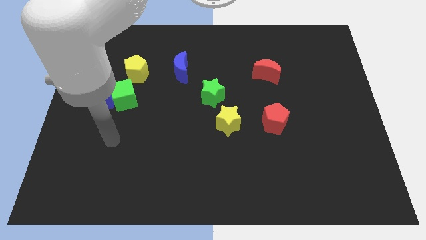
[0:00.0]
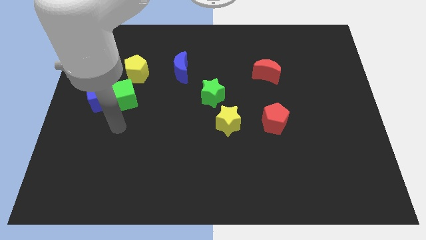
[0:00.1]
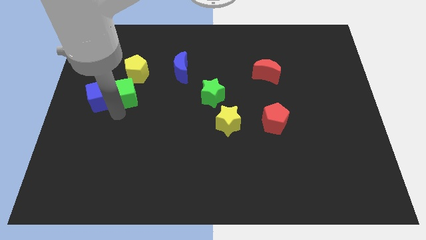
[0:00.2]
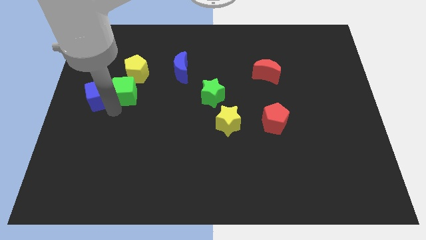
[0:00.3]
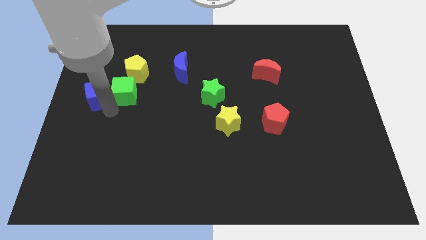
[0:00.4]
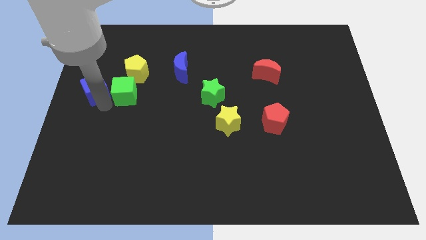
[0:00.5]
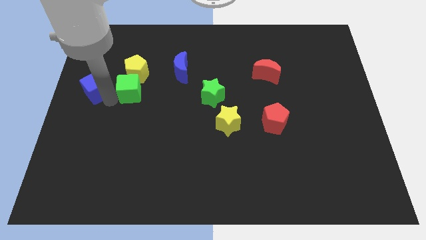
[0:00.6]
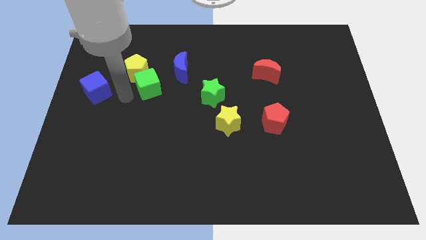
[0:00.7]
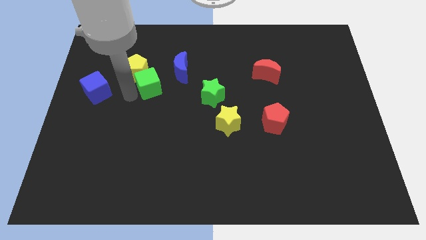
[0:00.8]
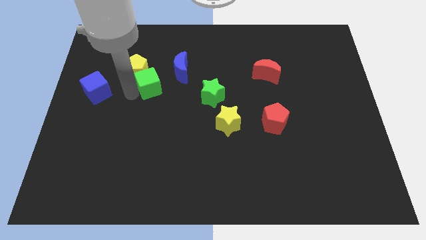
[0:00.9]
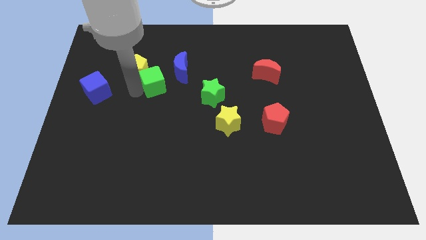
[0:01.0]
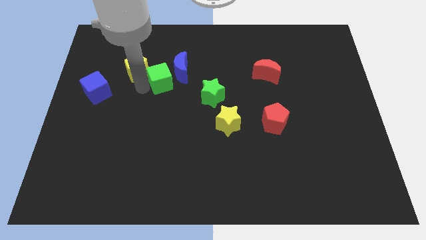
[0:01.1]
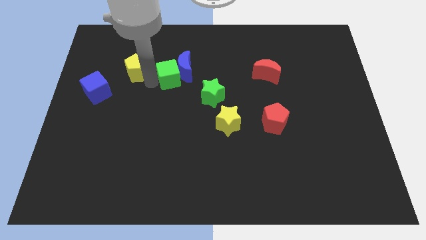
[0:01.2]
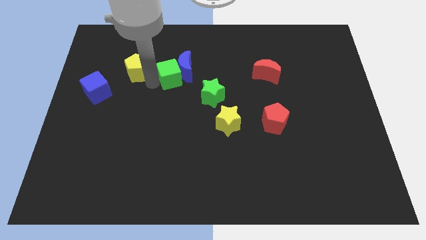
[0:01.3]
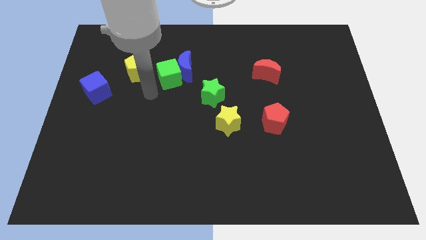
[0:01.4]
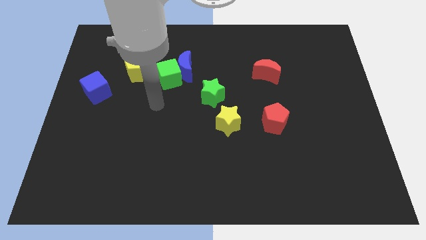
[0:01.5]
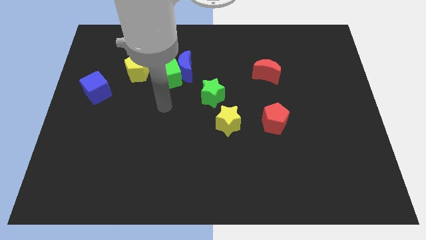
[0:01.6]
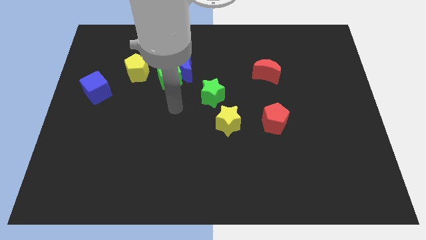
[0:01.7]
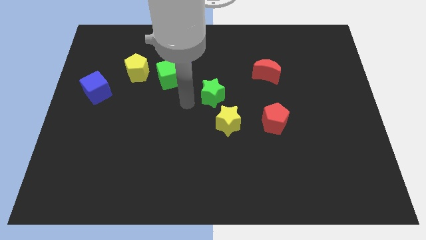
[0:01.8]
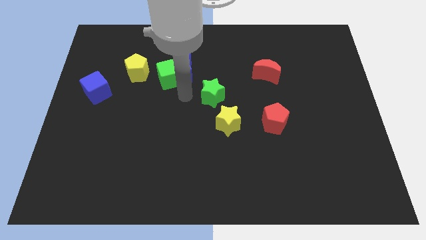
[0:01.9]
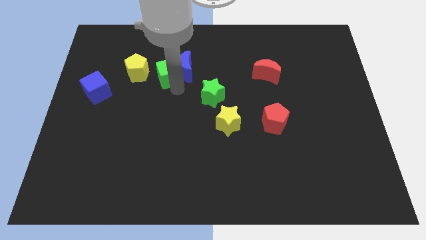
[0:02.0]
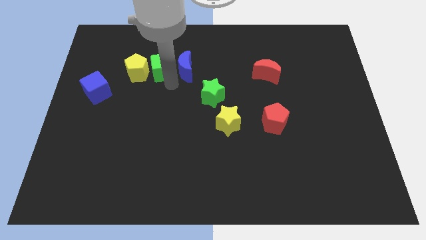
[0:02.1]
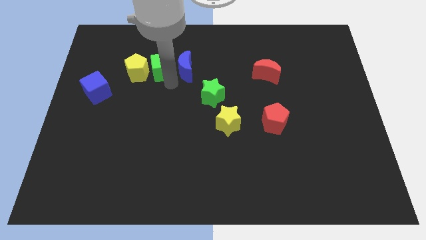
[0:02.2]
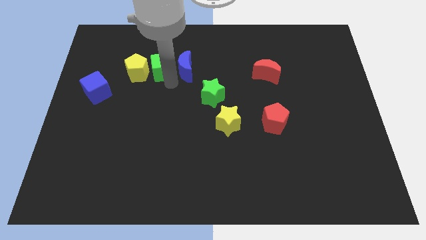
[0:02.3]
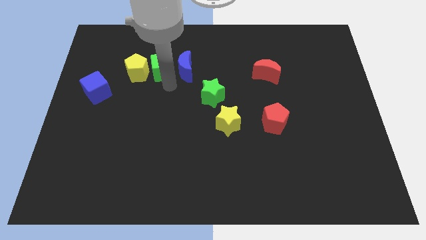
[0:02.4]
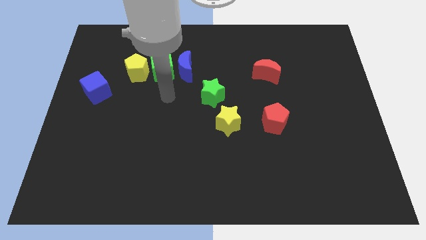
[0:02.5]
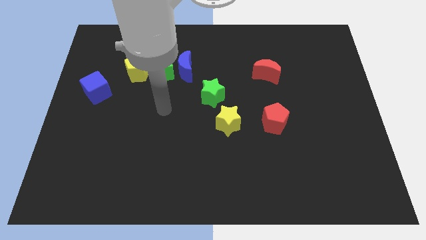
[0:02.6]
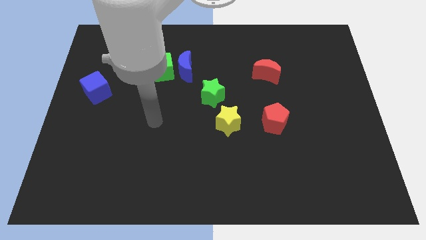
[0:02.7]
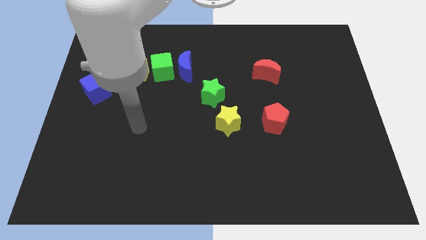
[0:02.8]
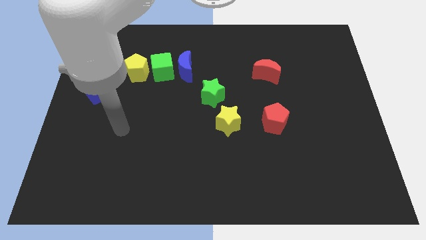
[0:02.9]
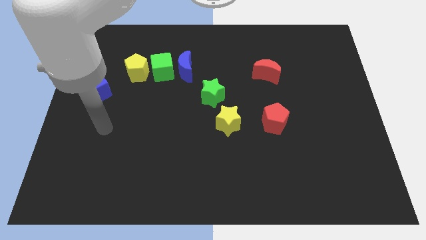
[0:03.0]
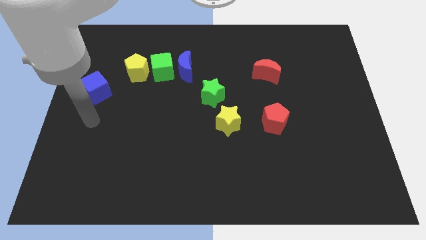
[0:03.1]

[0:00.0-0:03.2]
push the green cube in between the blue moon and yellow pentagon

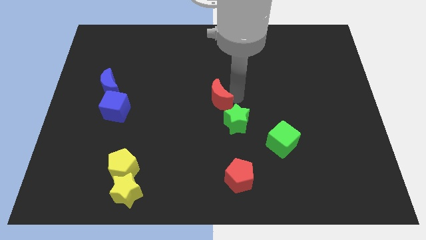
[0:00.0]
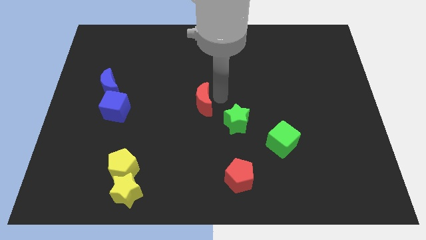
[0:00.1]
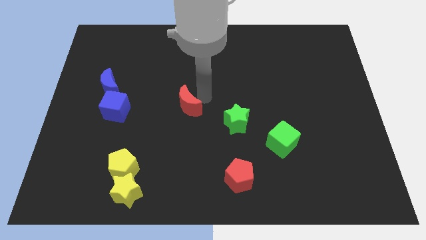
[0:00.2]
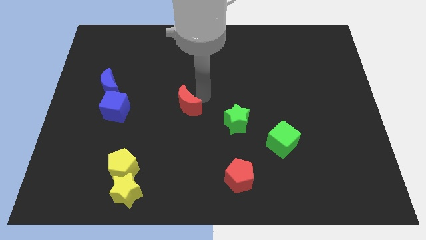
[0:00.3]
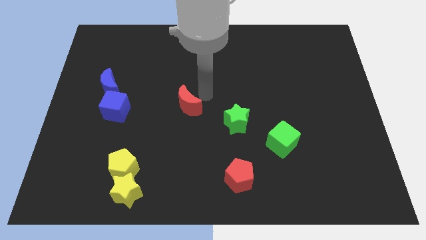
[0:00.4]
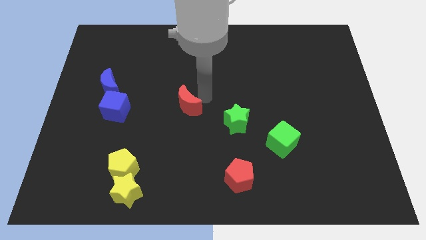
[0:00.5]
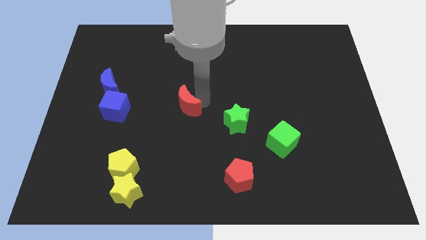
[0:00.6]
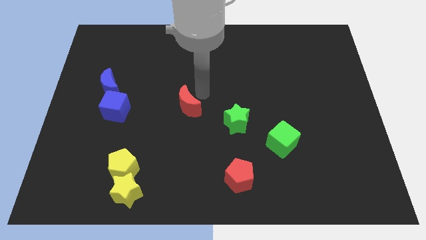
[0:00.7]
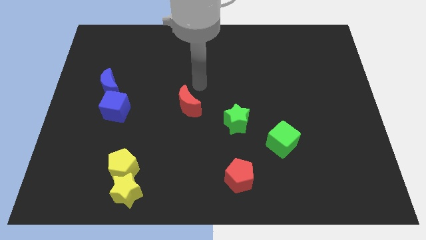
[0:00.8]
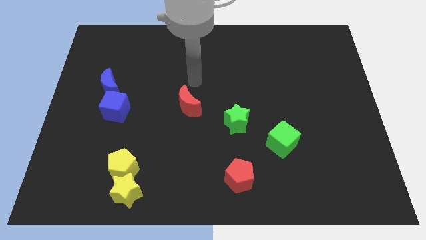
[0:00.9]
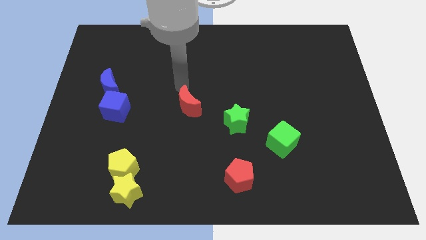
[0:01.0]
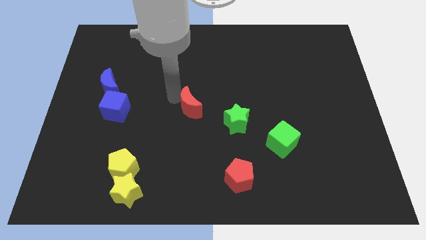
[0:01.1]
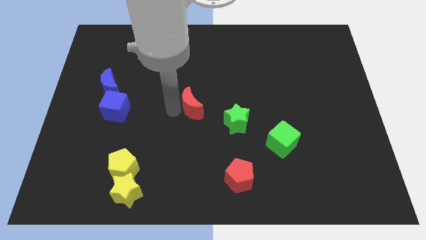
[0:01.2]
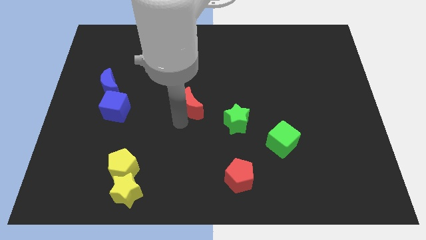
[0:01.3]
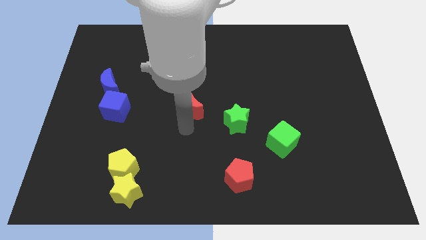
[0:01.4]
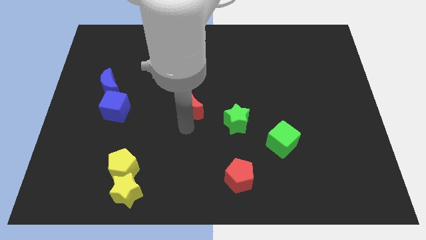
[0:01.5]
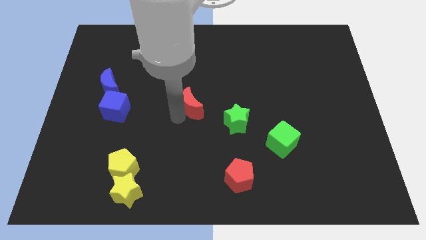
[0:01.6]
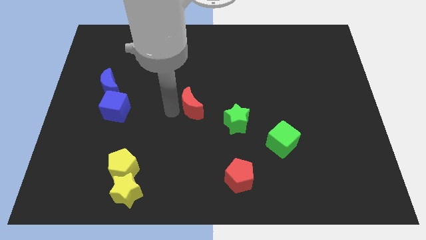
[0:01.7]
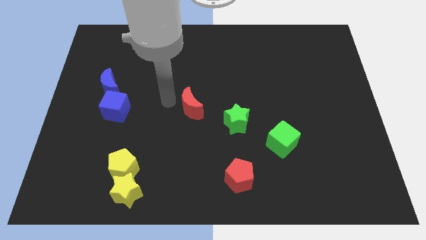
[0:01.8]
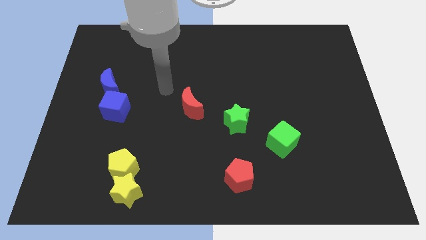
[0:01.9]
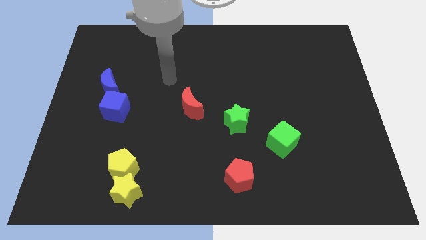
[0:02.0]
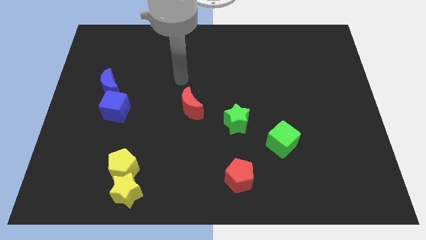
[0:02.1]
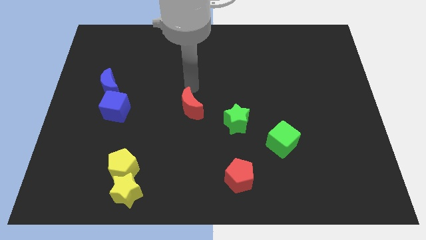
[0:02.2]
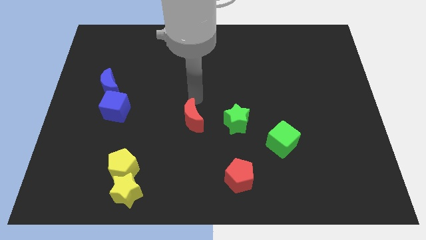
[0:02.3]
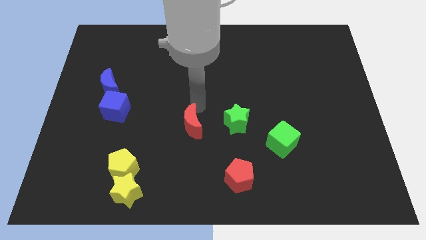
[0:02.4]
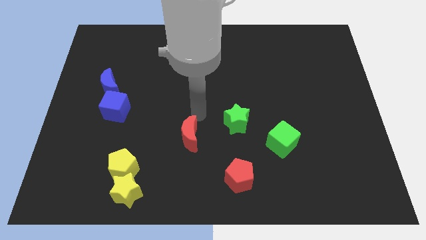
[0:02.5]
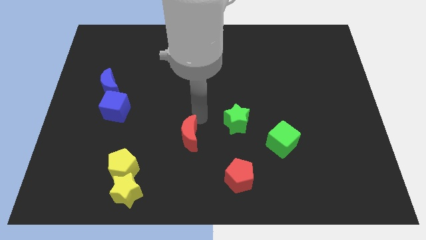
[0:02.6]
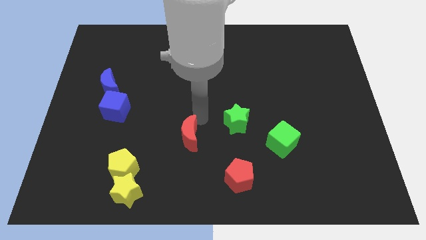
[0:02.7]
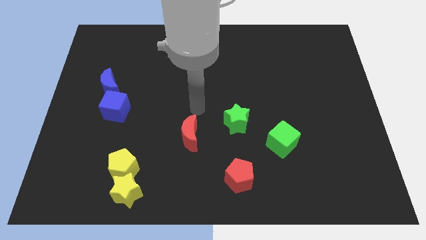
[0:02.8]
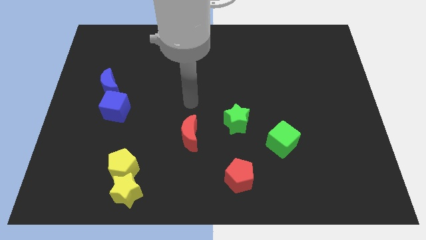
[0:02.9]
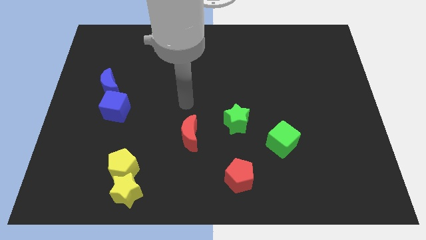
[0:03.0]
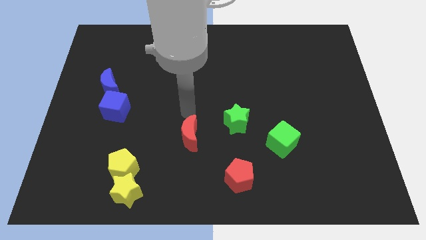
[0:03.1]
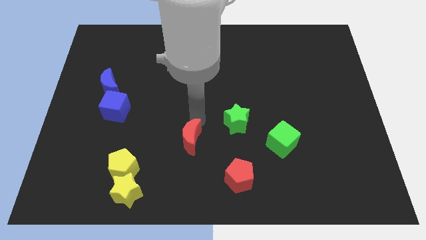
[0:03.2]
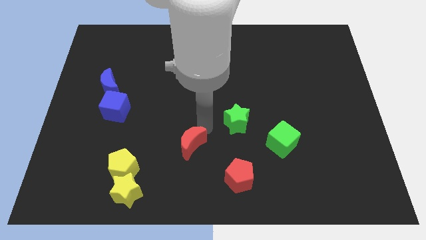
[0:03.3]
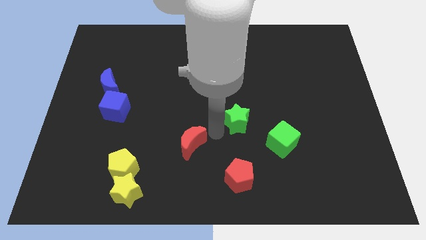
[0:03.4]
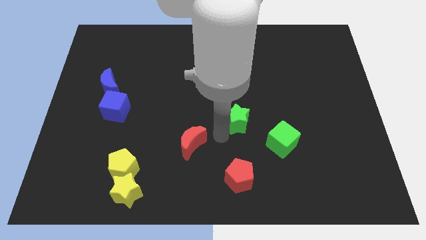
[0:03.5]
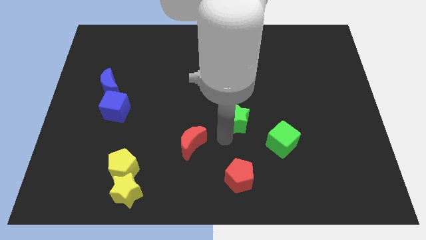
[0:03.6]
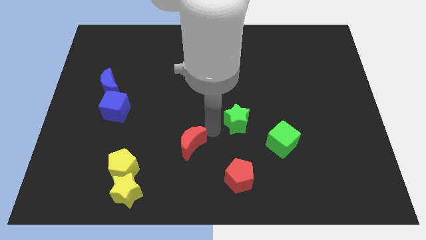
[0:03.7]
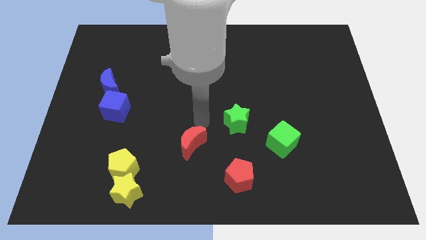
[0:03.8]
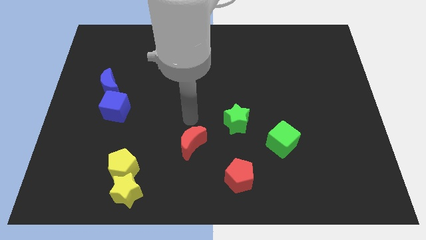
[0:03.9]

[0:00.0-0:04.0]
place the red moon to the center of the board

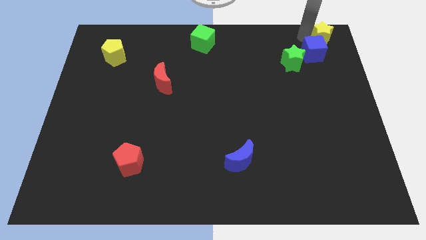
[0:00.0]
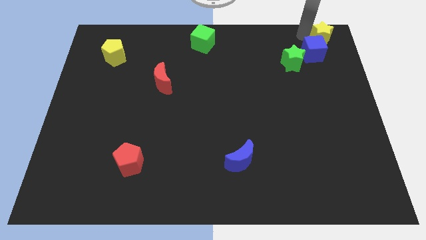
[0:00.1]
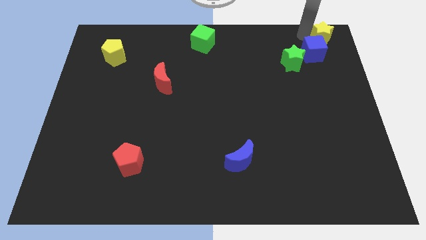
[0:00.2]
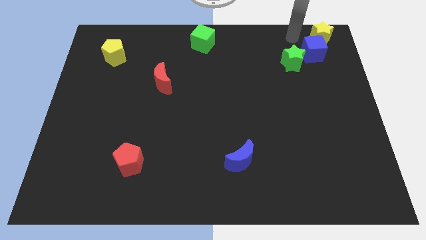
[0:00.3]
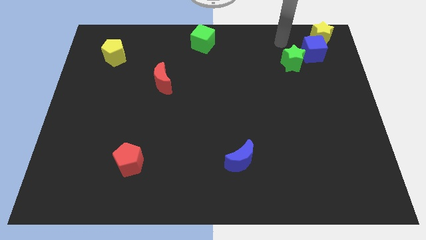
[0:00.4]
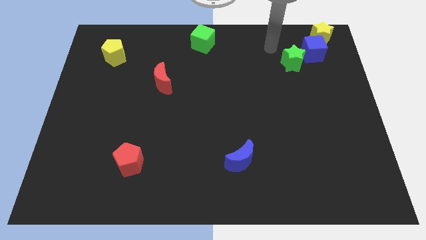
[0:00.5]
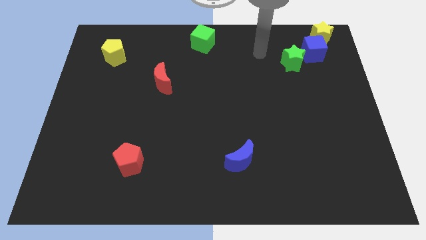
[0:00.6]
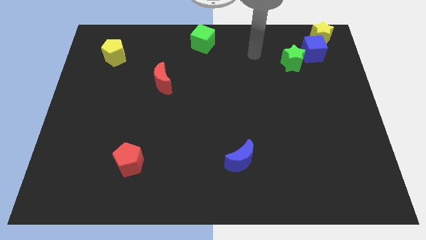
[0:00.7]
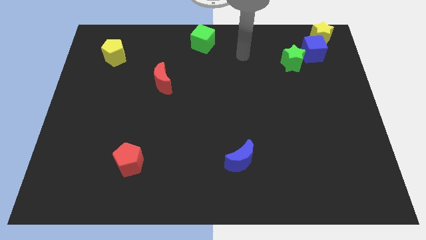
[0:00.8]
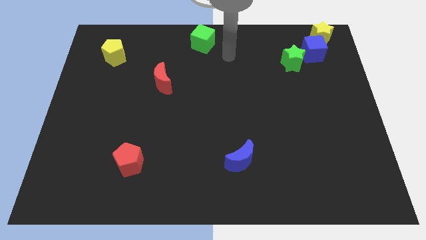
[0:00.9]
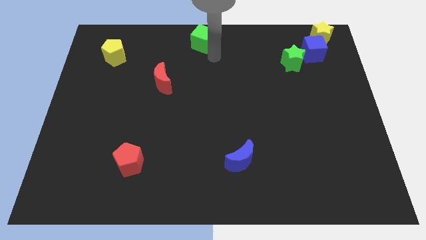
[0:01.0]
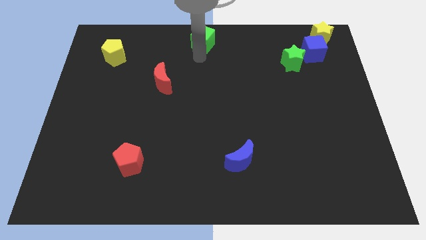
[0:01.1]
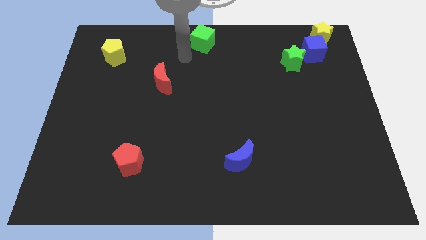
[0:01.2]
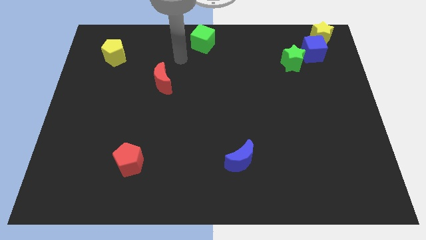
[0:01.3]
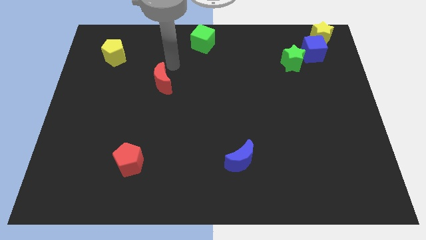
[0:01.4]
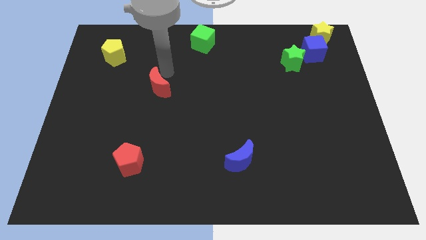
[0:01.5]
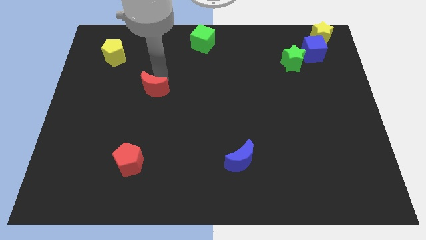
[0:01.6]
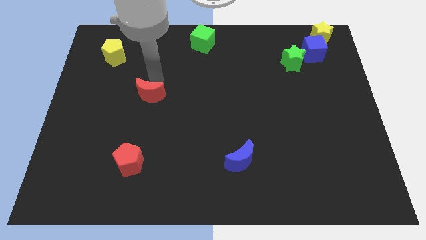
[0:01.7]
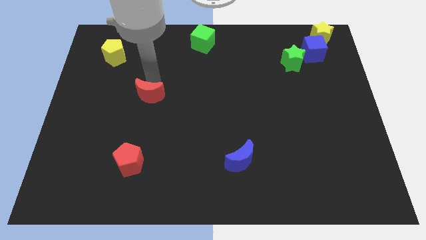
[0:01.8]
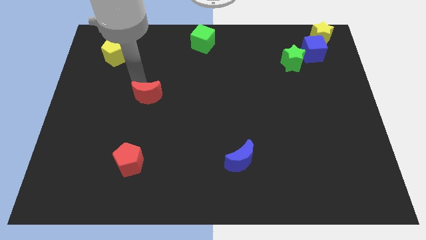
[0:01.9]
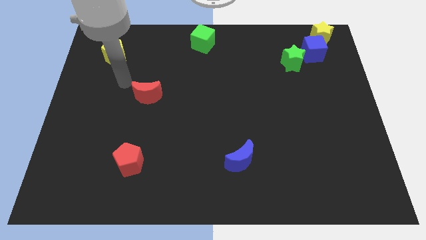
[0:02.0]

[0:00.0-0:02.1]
move your arm towards the red crescent
